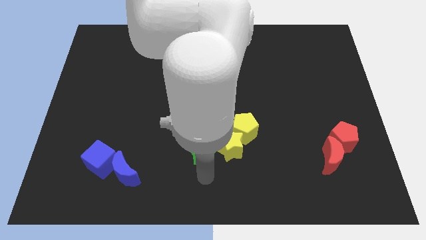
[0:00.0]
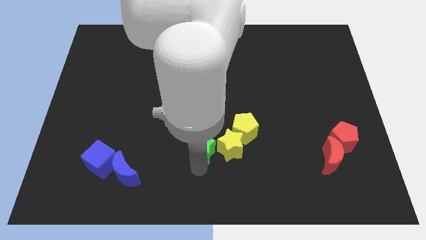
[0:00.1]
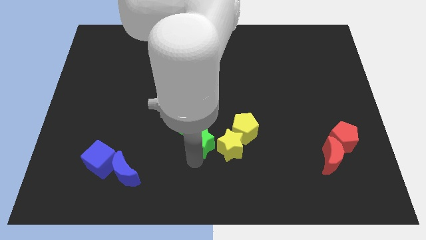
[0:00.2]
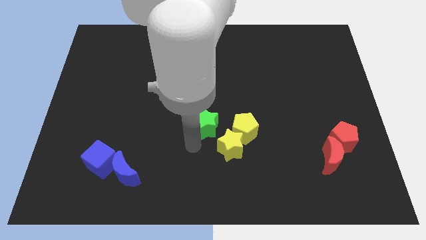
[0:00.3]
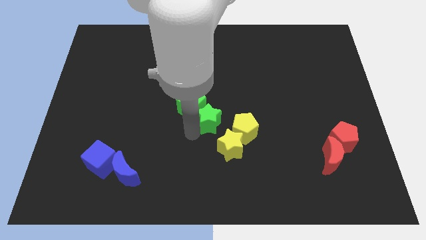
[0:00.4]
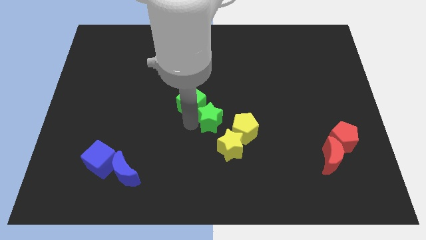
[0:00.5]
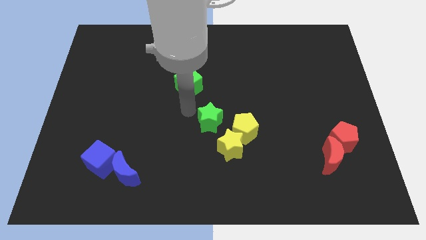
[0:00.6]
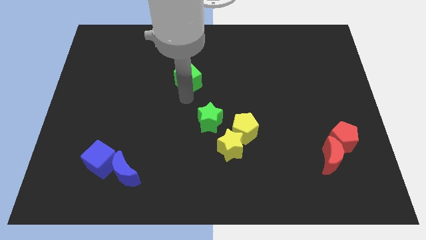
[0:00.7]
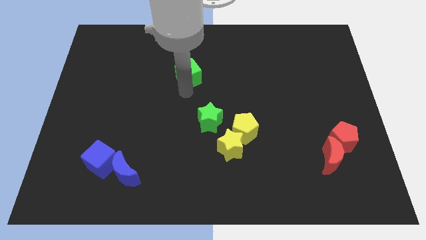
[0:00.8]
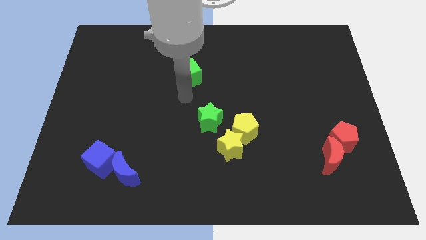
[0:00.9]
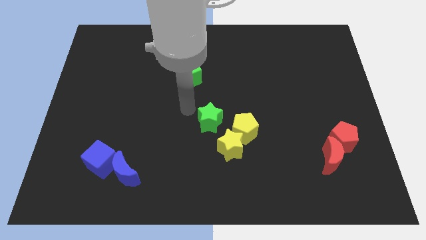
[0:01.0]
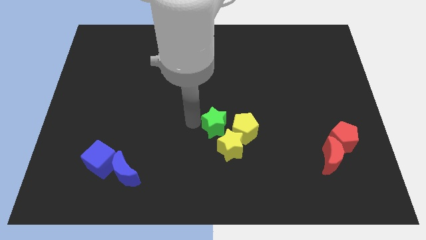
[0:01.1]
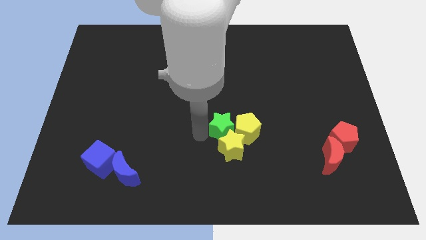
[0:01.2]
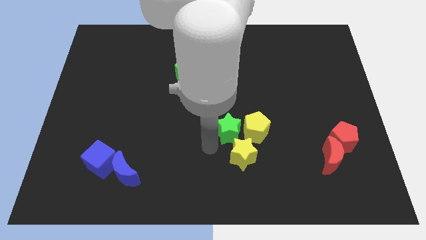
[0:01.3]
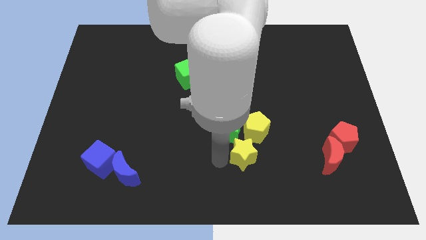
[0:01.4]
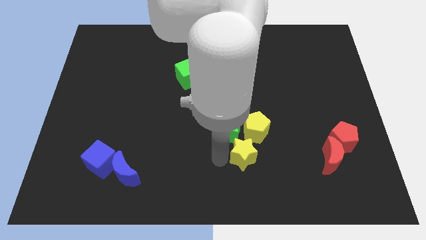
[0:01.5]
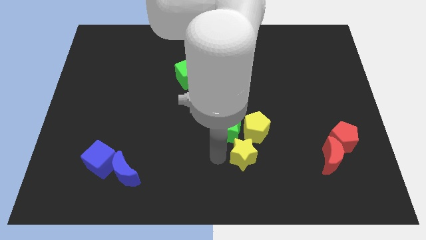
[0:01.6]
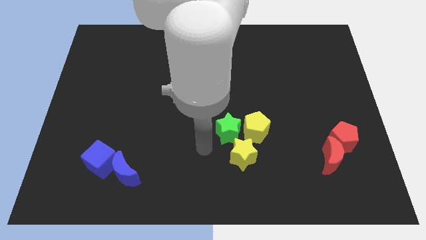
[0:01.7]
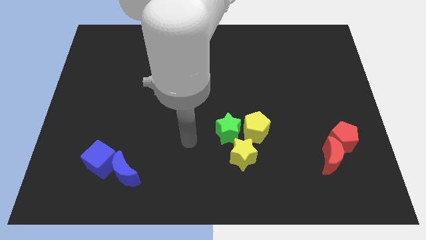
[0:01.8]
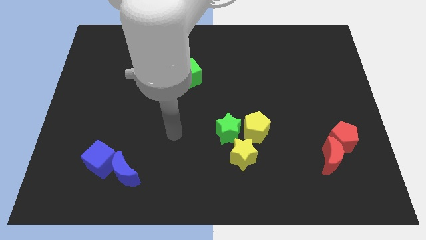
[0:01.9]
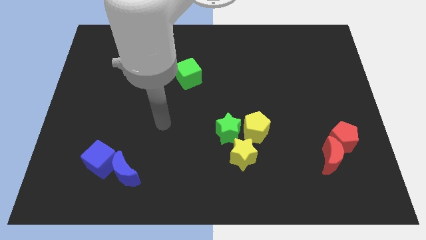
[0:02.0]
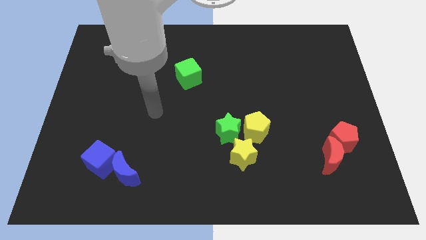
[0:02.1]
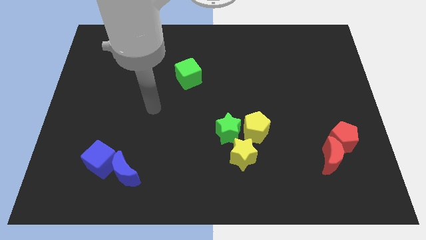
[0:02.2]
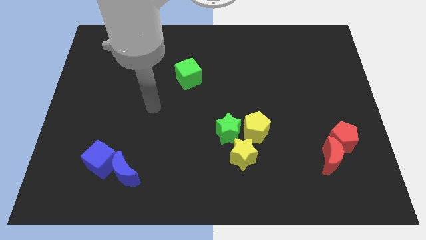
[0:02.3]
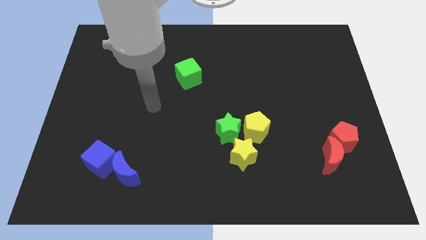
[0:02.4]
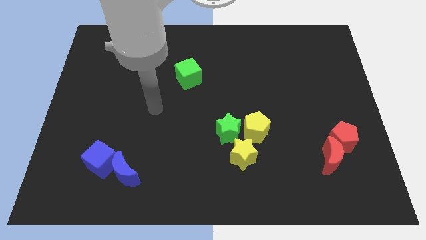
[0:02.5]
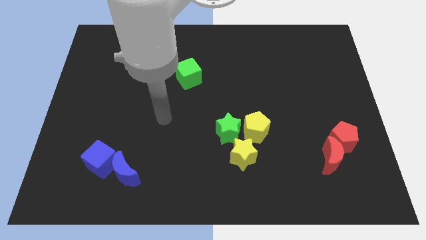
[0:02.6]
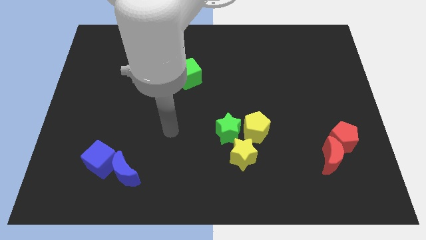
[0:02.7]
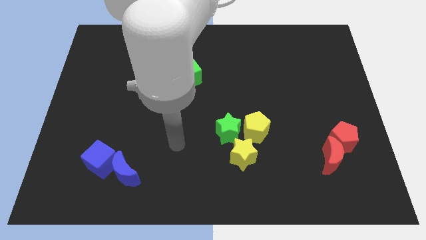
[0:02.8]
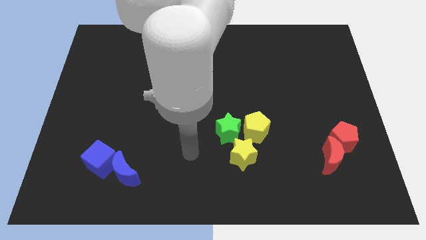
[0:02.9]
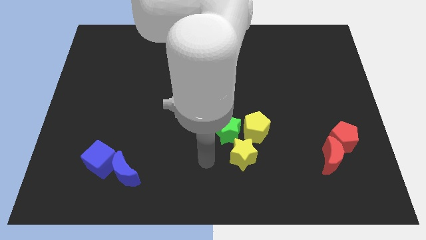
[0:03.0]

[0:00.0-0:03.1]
push green star into yellow blocks

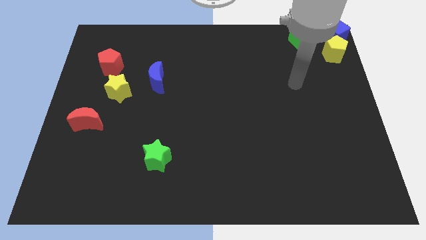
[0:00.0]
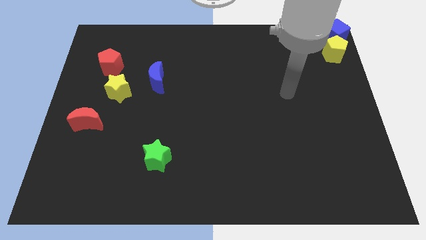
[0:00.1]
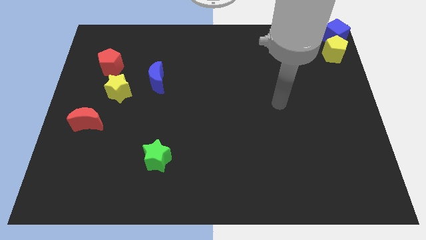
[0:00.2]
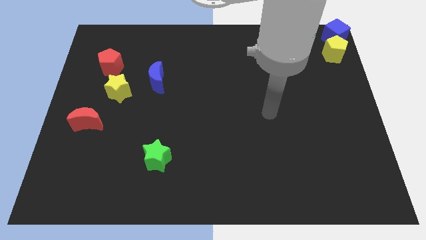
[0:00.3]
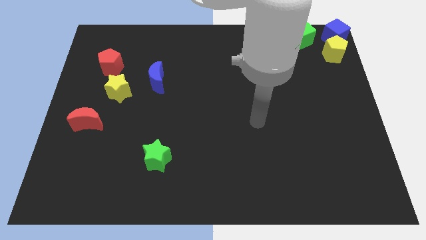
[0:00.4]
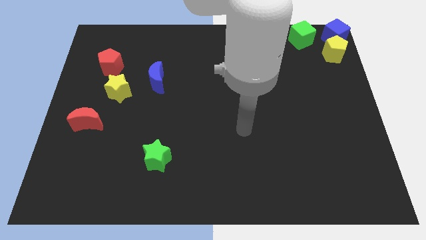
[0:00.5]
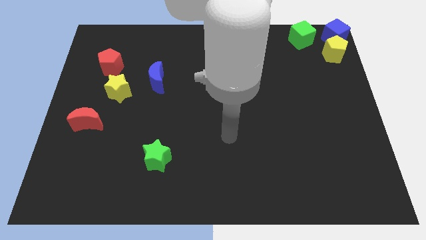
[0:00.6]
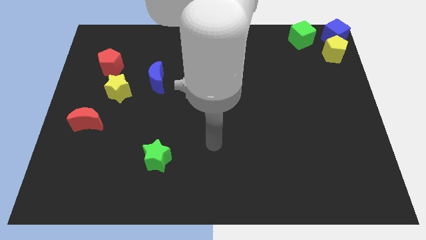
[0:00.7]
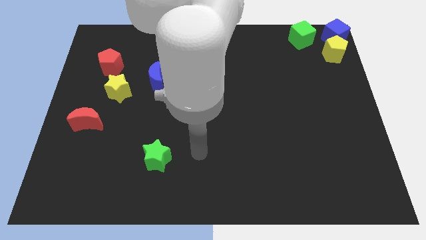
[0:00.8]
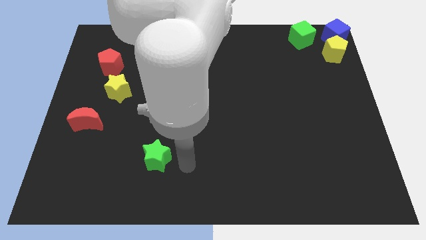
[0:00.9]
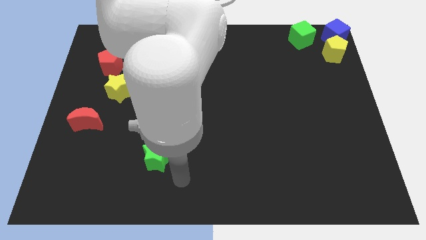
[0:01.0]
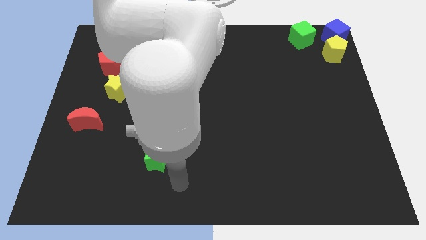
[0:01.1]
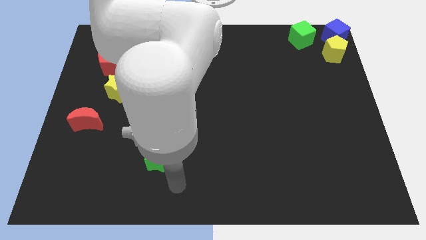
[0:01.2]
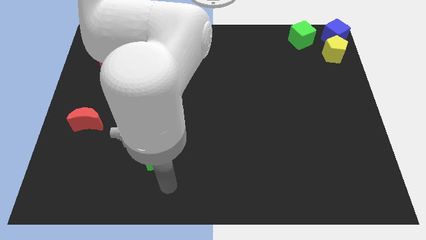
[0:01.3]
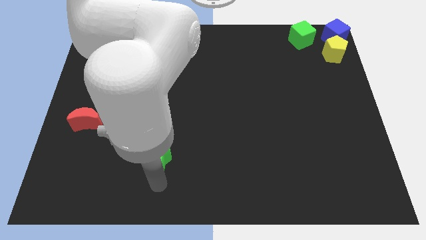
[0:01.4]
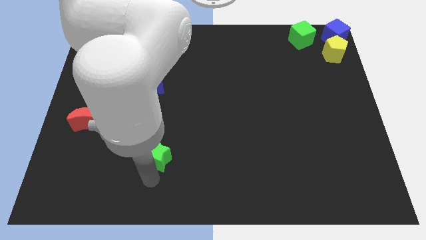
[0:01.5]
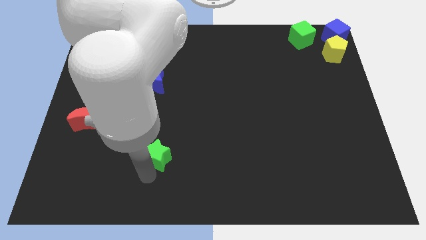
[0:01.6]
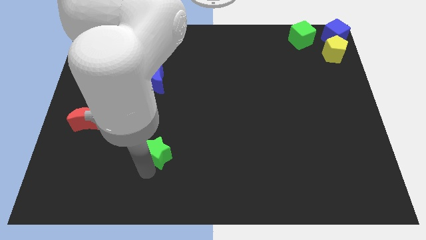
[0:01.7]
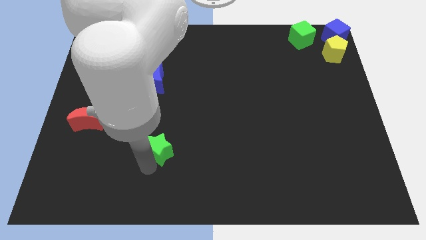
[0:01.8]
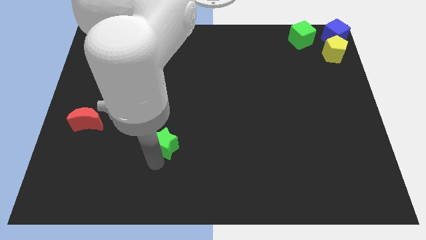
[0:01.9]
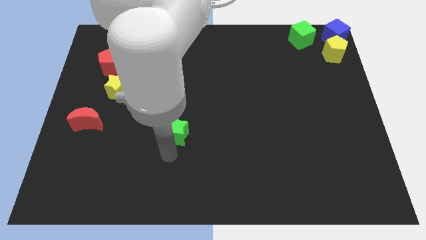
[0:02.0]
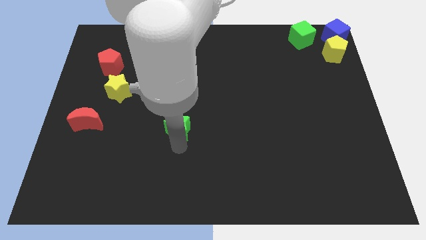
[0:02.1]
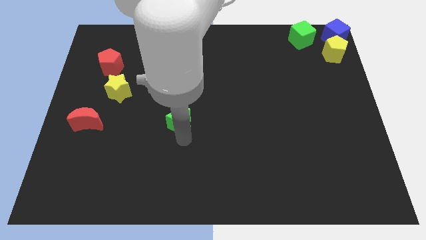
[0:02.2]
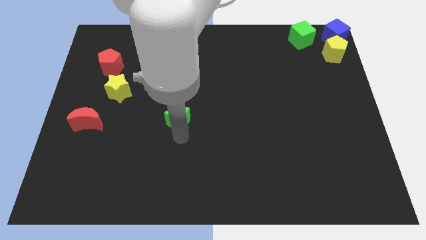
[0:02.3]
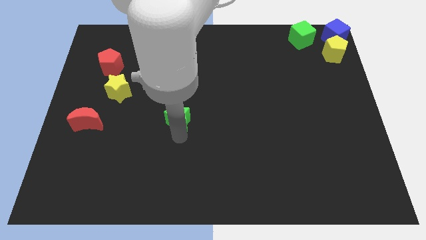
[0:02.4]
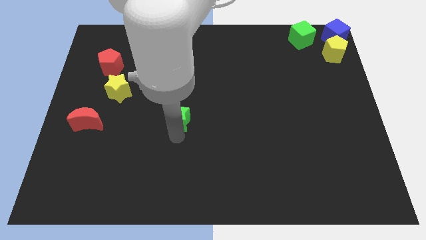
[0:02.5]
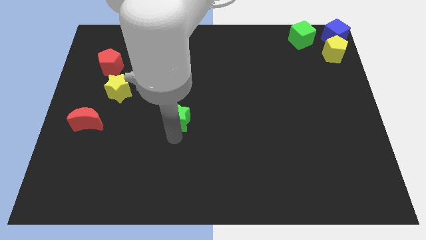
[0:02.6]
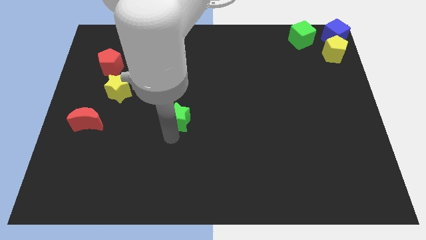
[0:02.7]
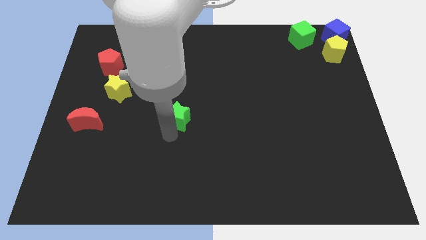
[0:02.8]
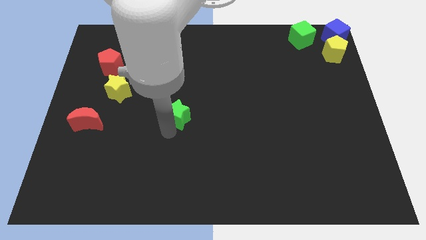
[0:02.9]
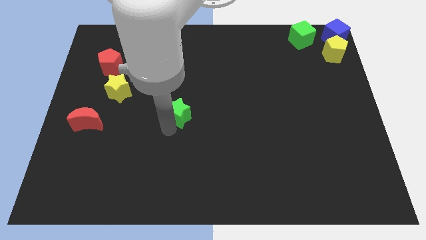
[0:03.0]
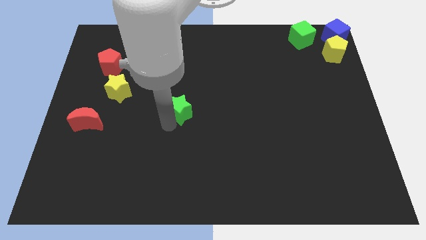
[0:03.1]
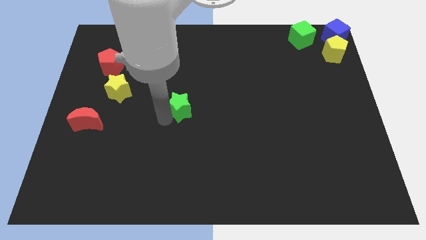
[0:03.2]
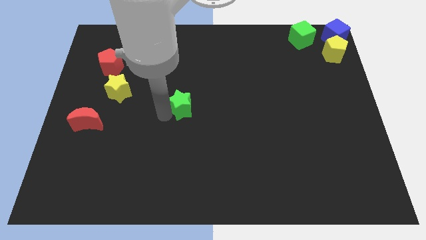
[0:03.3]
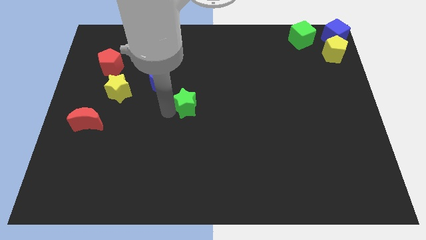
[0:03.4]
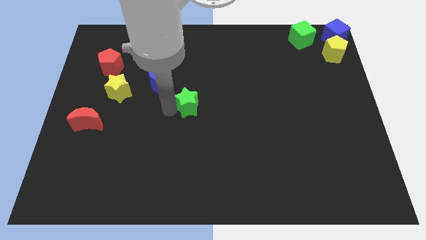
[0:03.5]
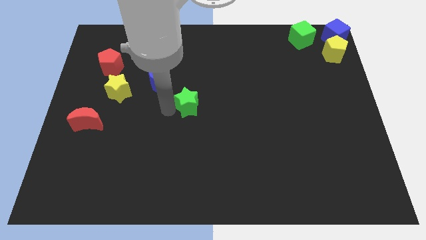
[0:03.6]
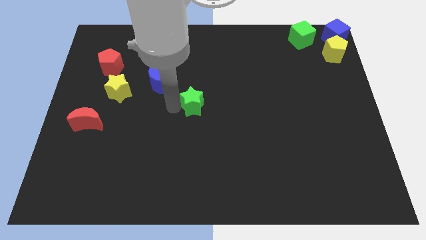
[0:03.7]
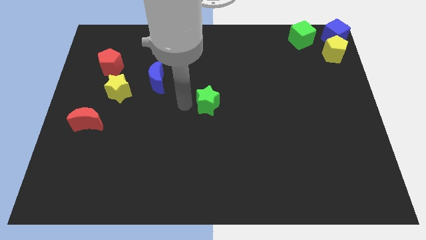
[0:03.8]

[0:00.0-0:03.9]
push the green star to the center of the board

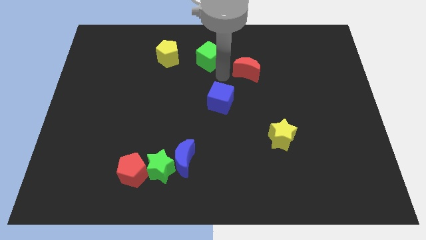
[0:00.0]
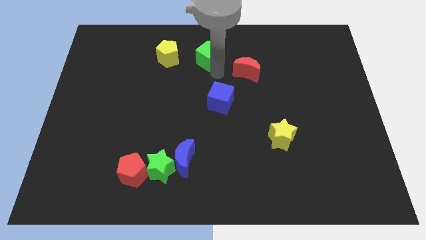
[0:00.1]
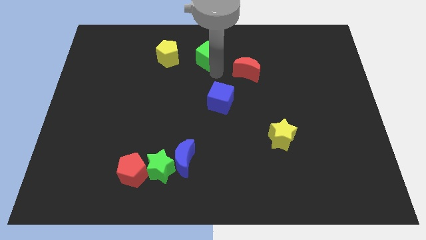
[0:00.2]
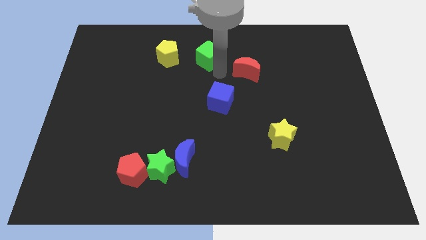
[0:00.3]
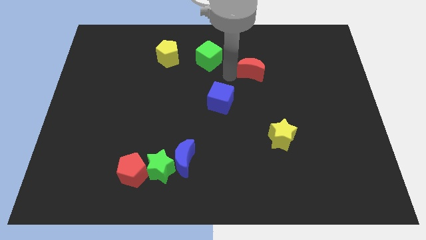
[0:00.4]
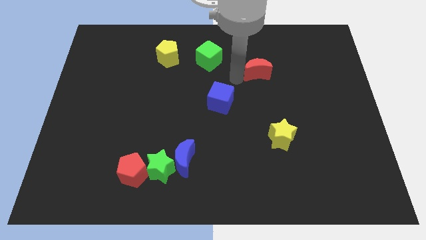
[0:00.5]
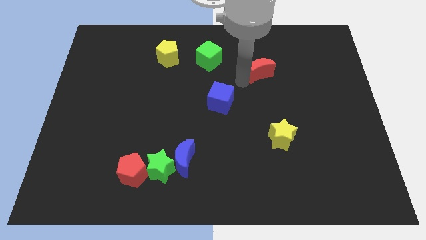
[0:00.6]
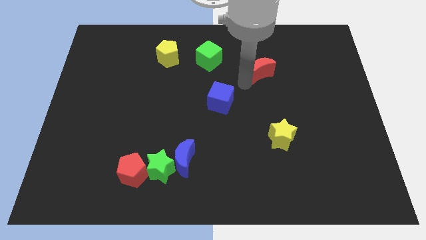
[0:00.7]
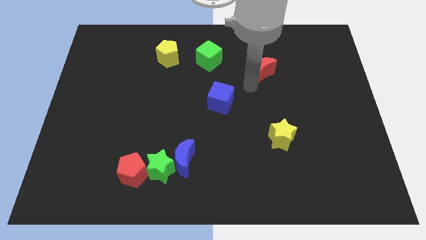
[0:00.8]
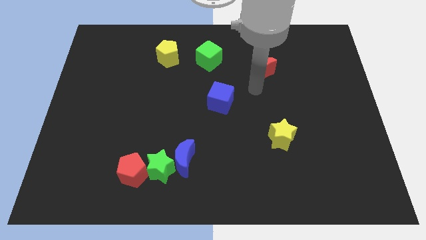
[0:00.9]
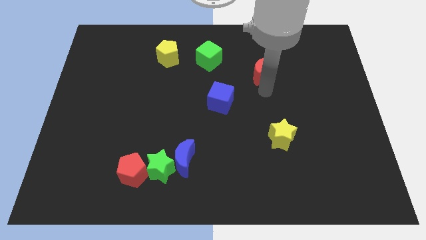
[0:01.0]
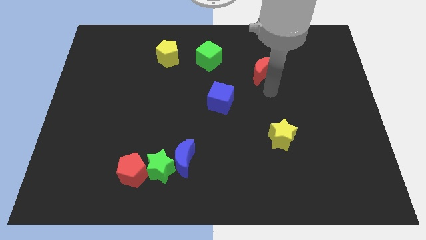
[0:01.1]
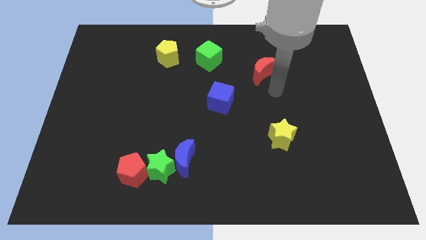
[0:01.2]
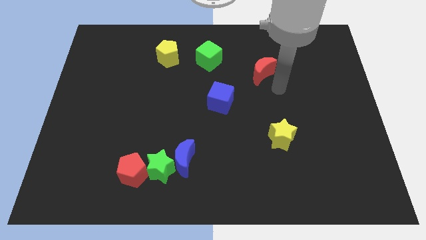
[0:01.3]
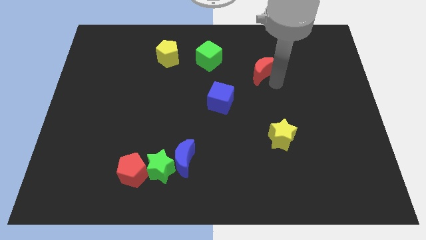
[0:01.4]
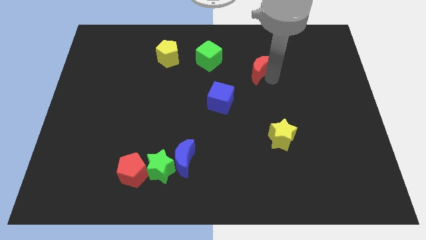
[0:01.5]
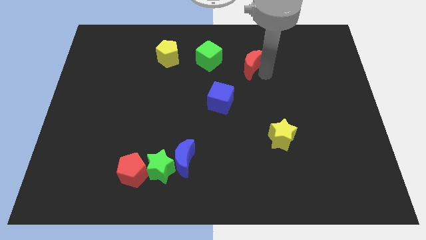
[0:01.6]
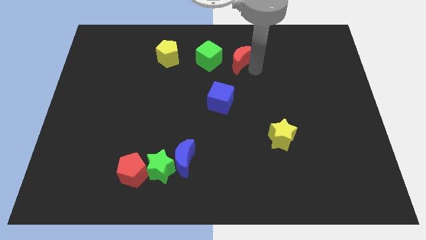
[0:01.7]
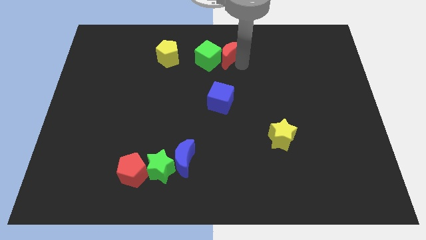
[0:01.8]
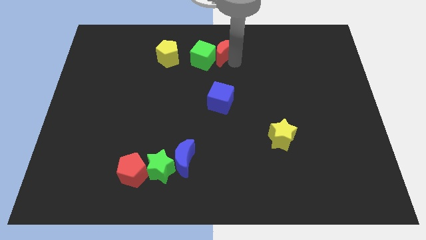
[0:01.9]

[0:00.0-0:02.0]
move red moon into green cube
